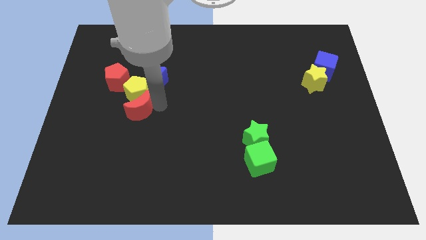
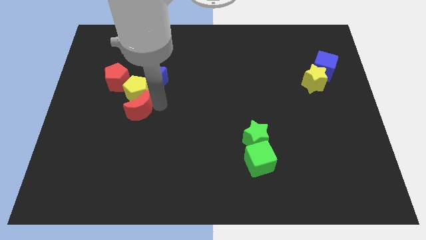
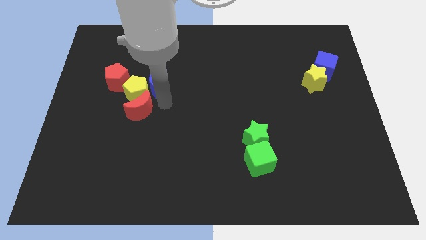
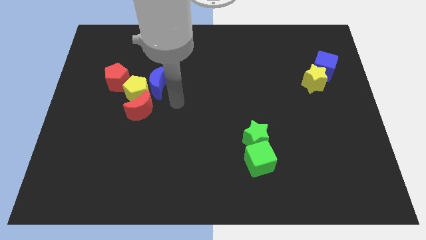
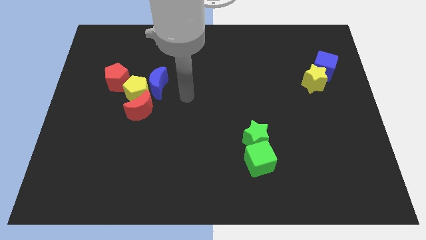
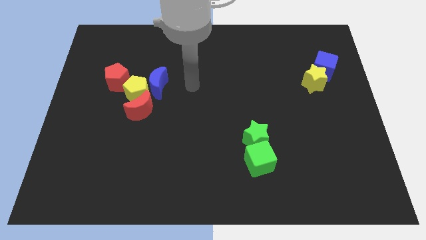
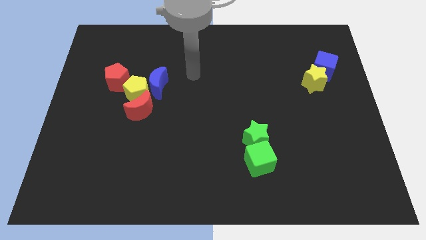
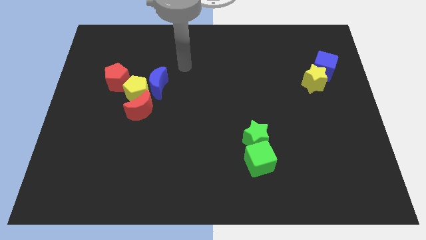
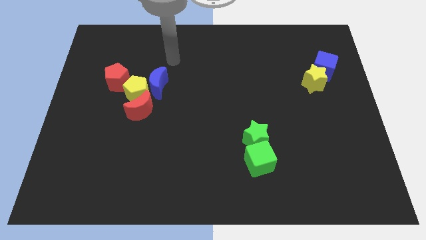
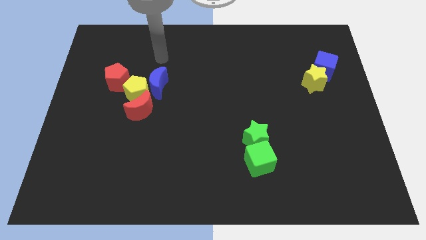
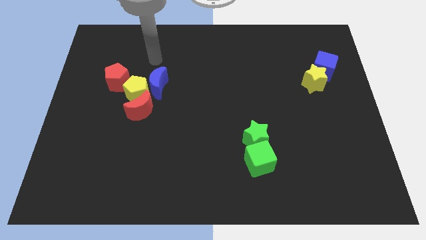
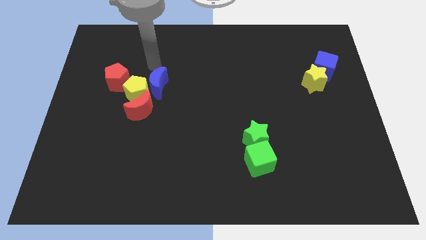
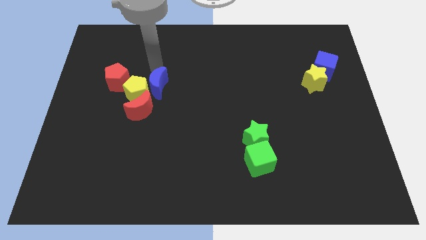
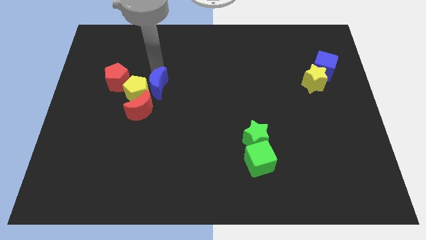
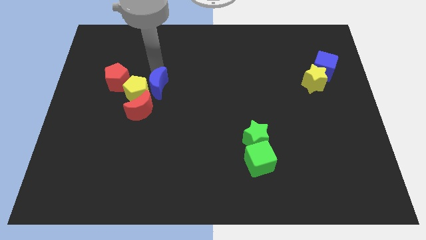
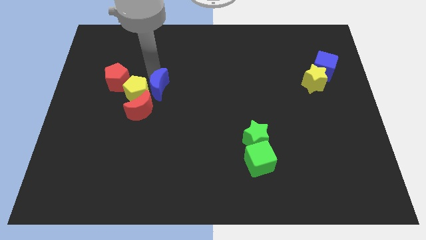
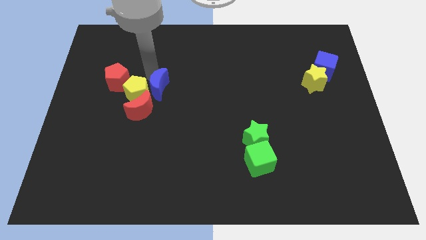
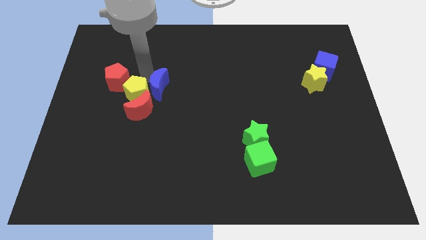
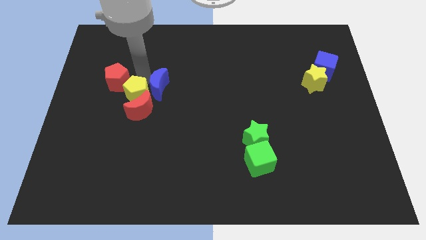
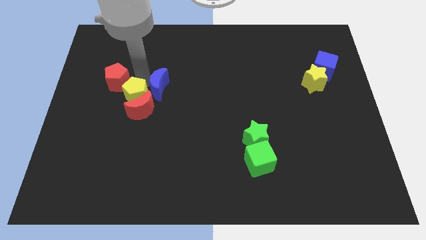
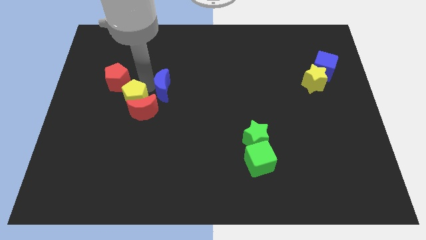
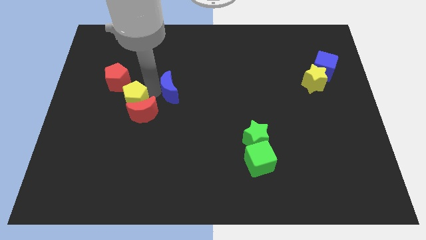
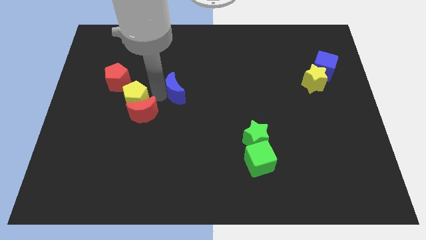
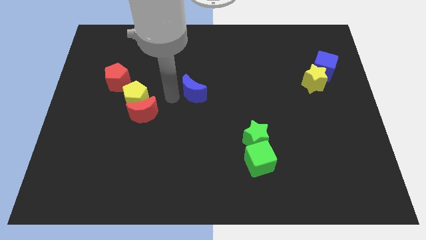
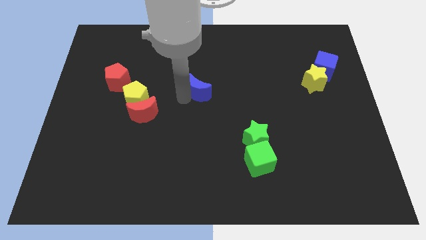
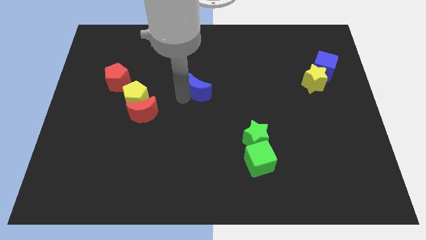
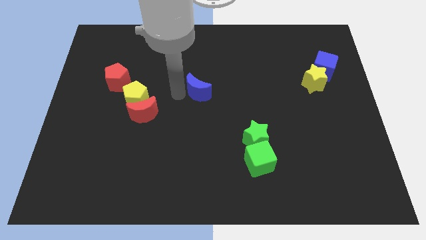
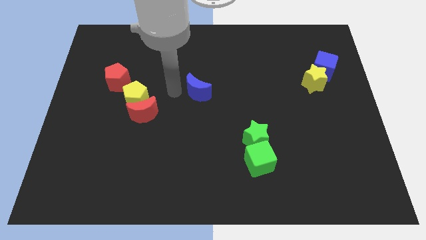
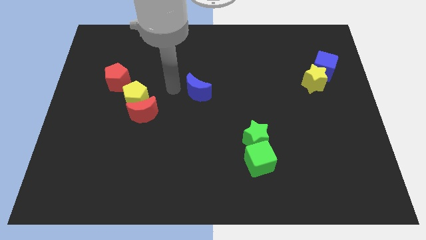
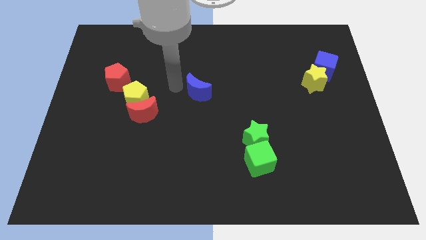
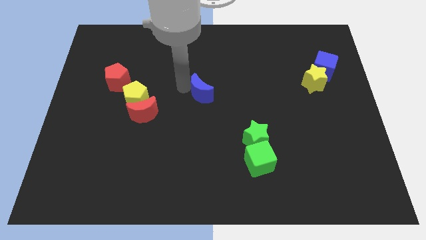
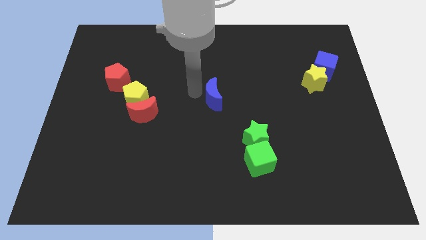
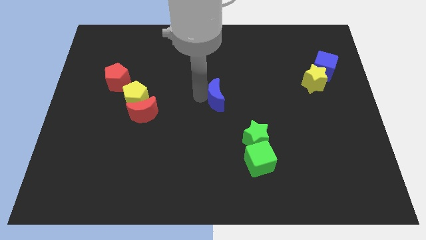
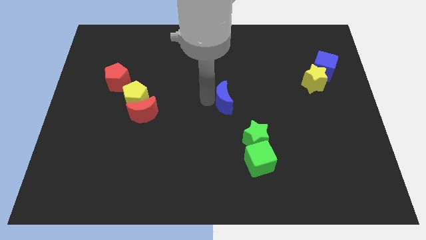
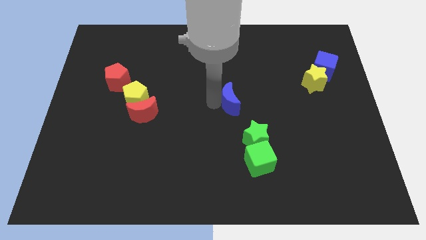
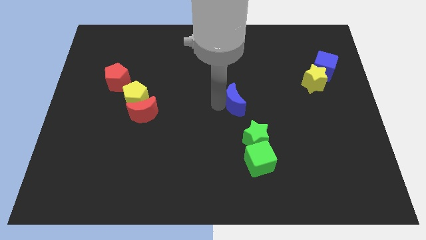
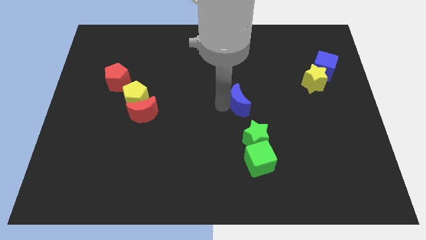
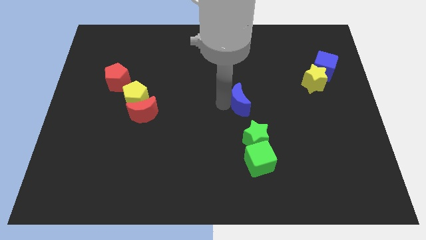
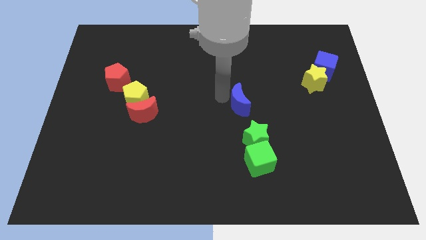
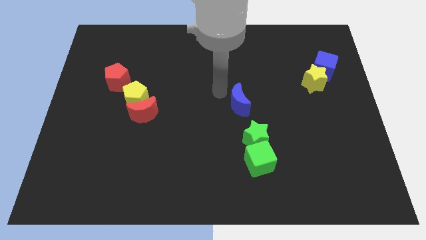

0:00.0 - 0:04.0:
move the blue crescent away from the yellow pentagon

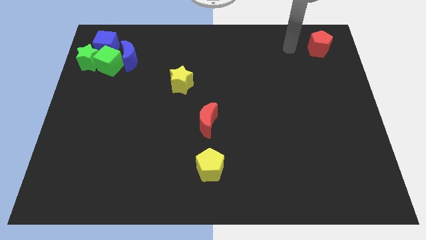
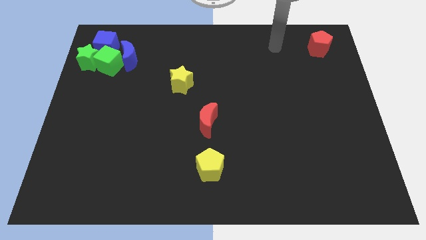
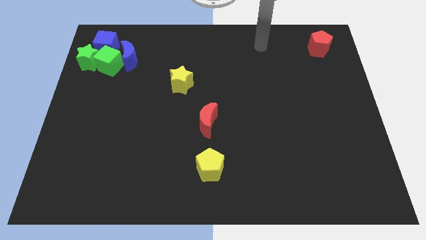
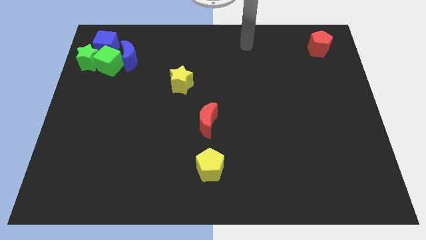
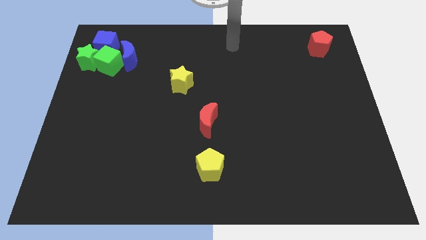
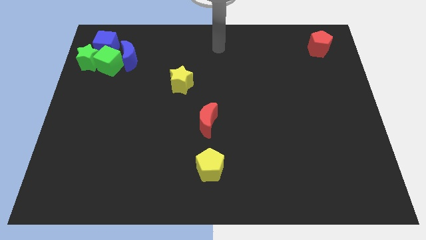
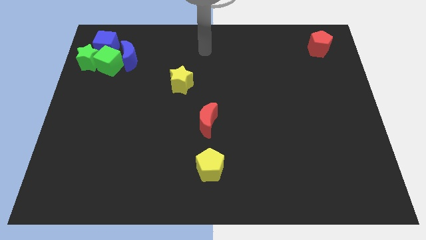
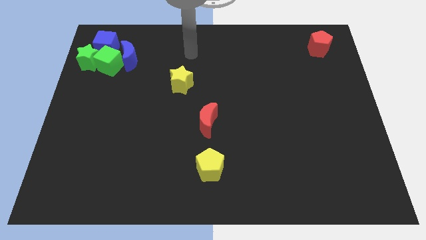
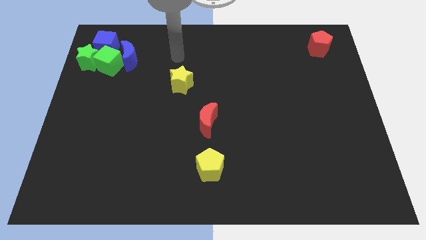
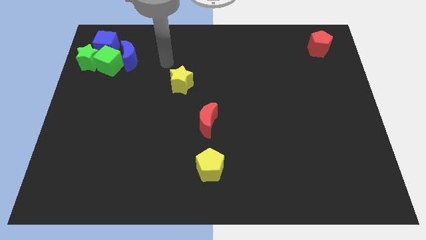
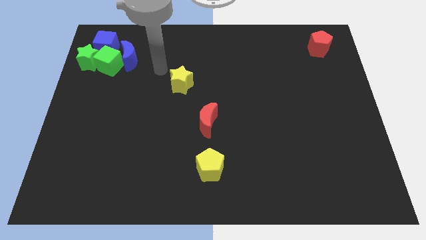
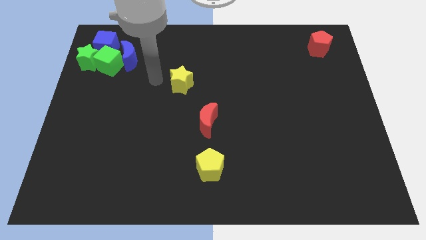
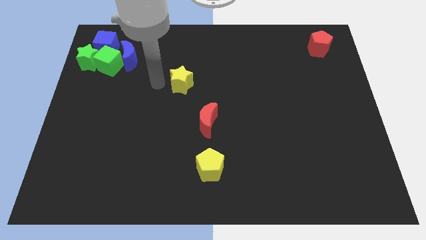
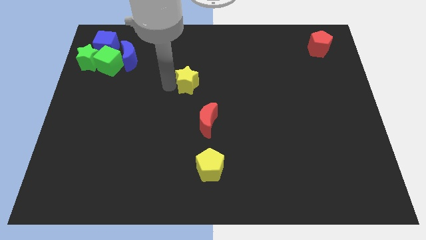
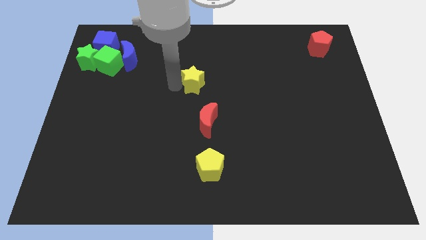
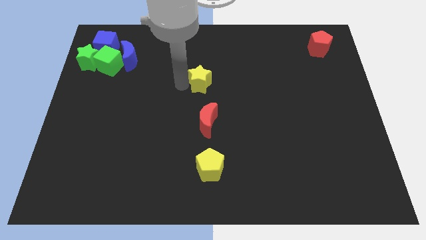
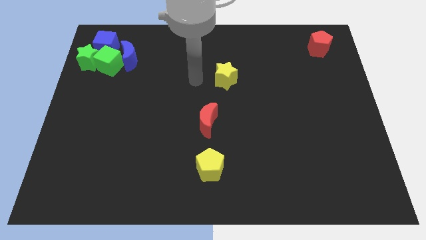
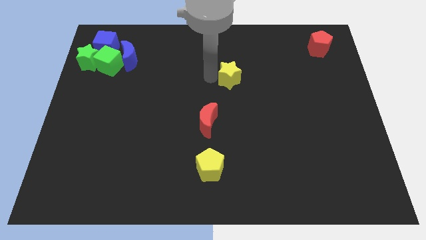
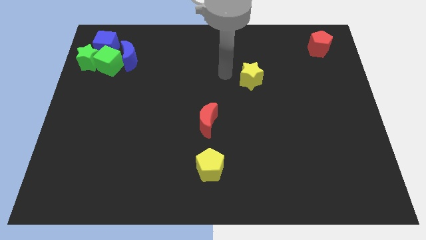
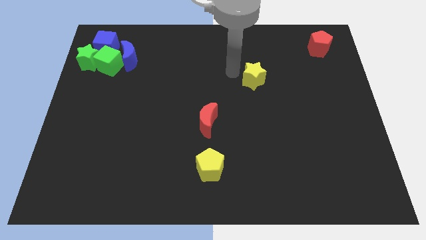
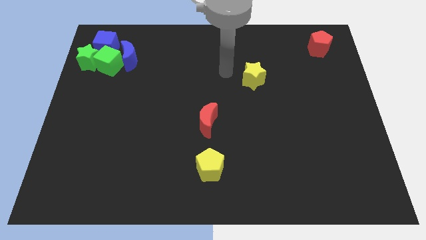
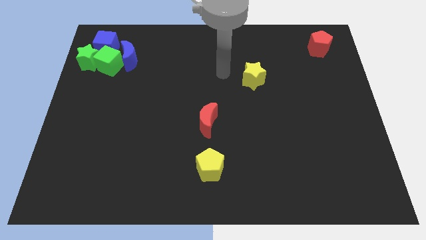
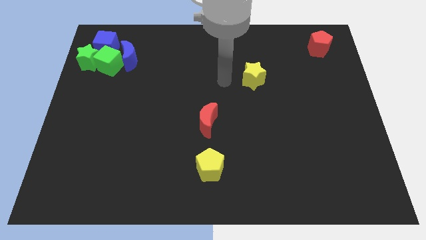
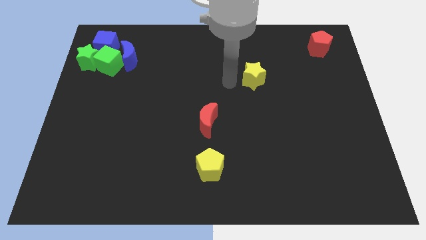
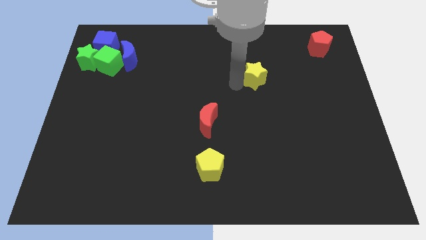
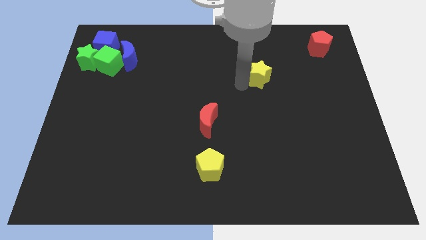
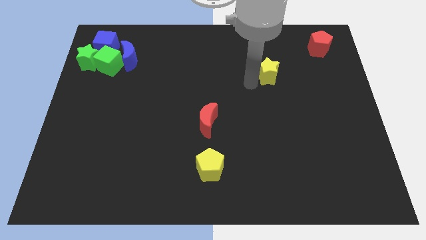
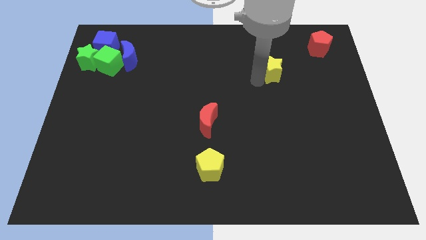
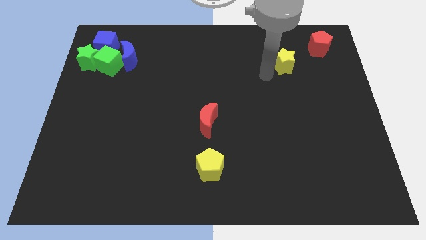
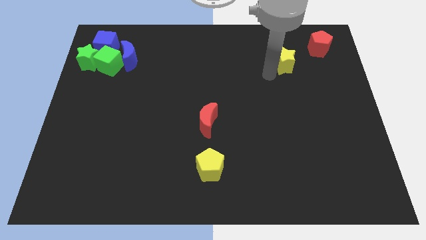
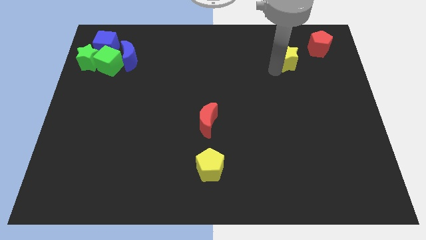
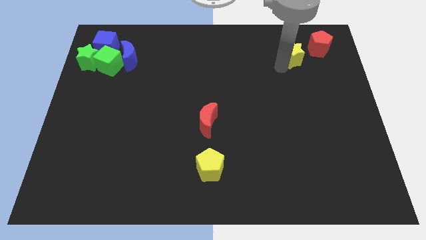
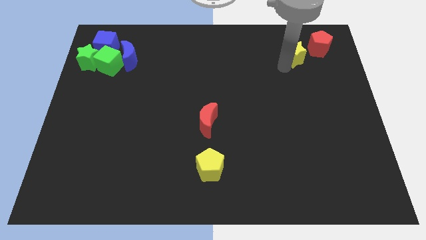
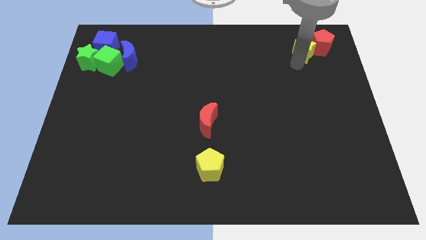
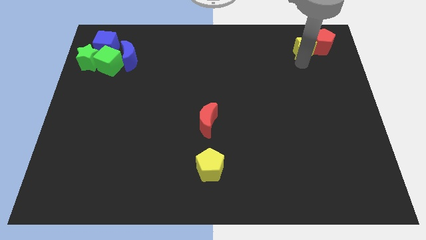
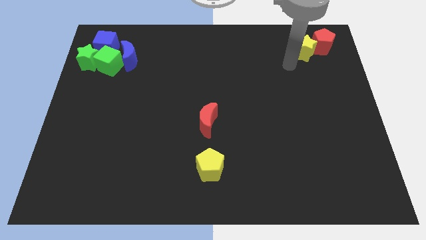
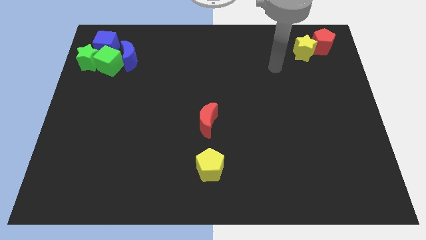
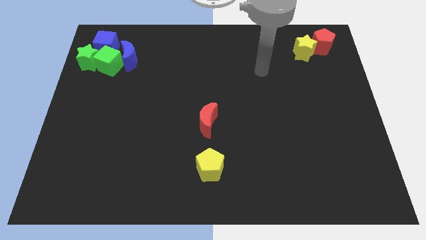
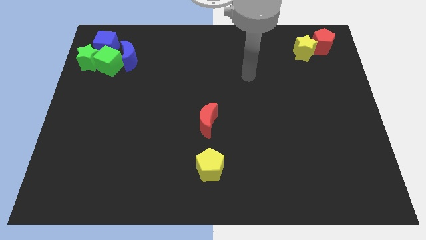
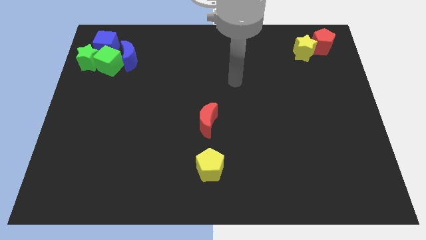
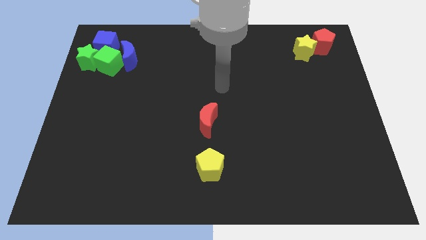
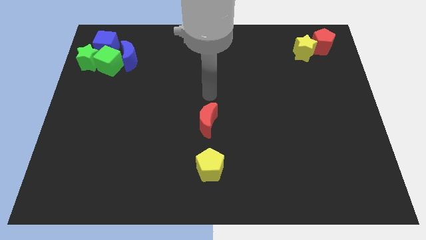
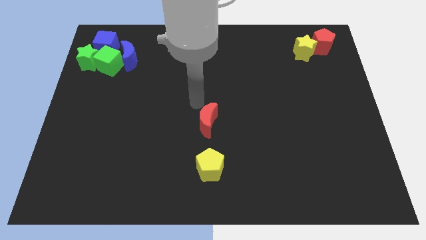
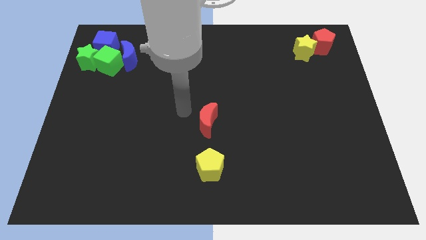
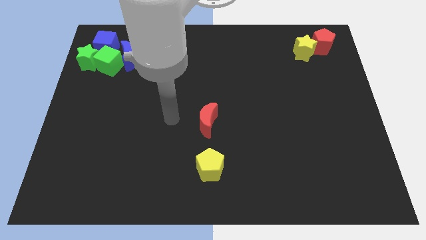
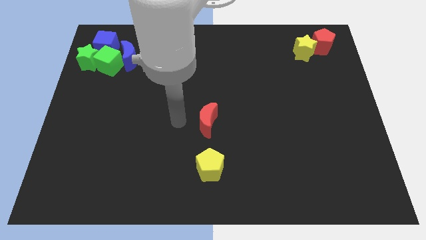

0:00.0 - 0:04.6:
push the yellow star into the red pentagon

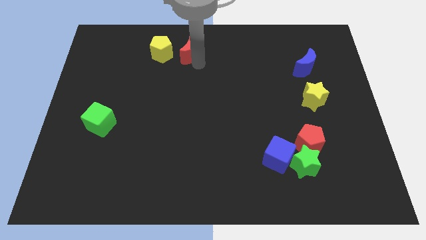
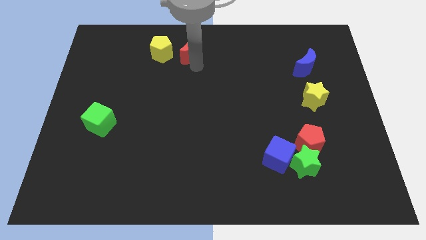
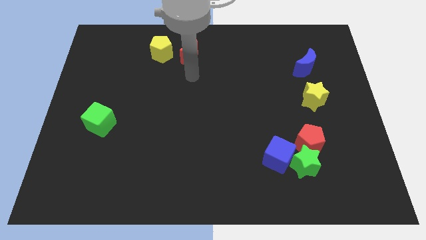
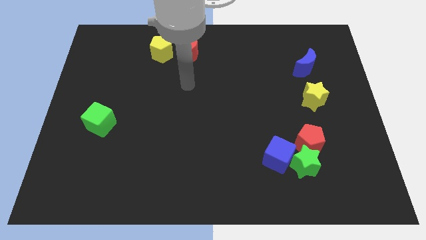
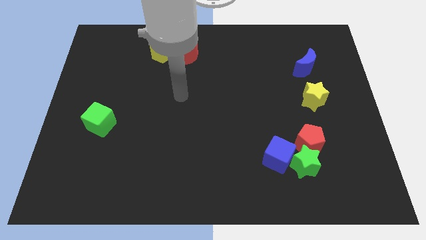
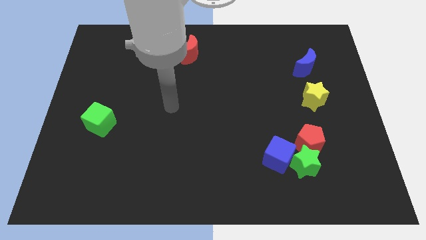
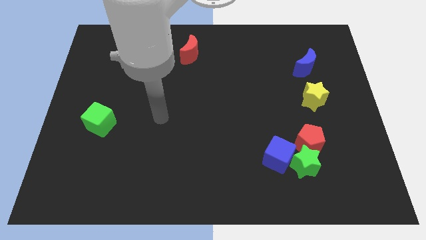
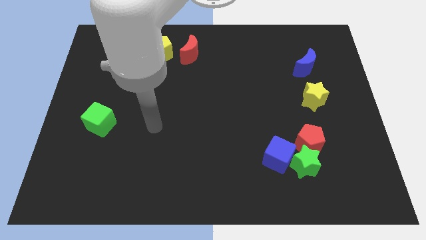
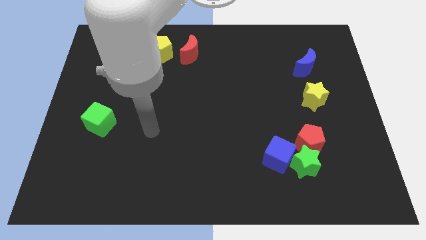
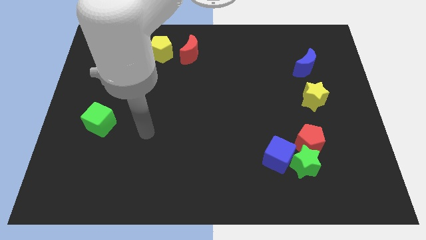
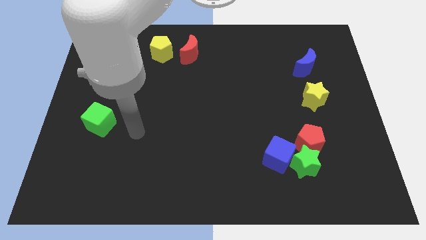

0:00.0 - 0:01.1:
move your arm away from red crescent
